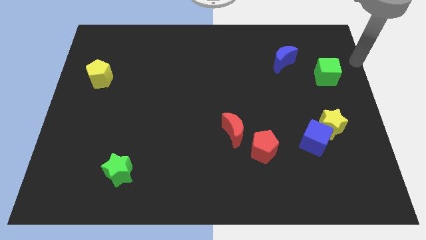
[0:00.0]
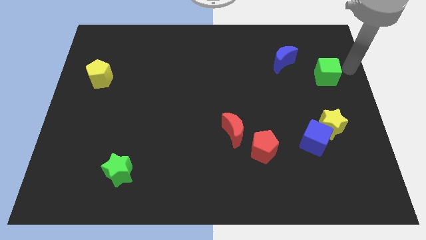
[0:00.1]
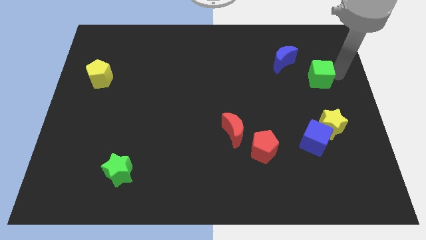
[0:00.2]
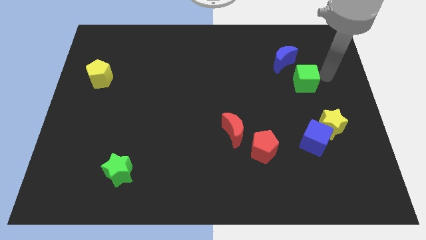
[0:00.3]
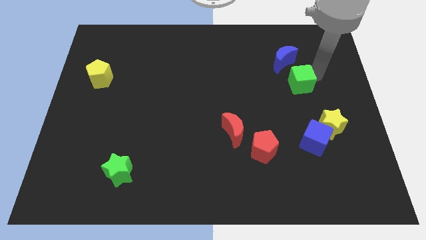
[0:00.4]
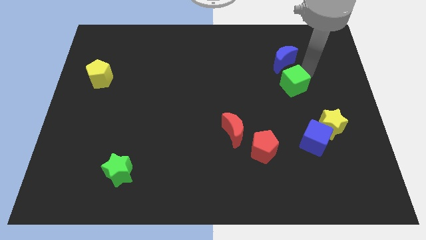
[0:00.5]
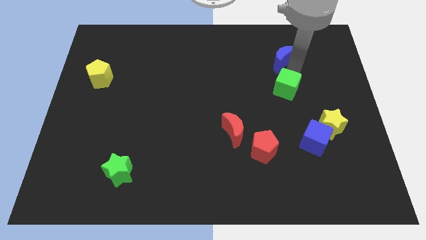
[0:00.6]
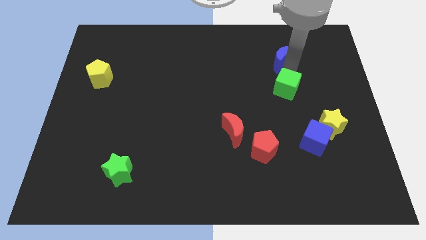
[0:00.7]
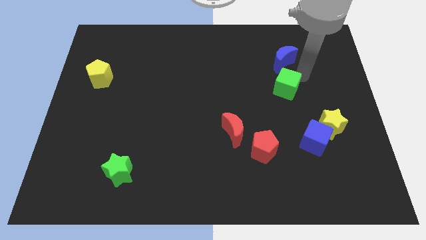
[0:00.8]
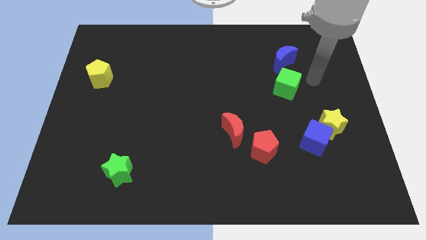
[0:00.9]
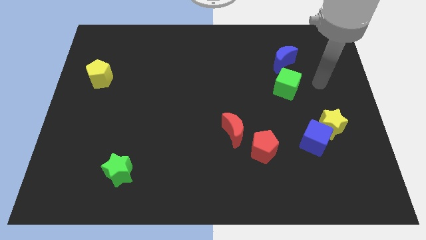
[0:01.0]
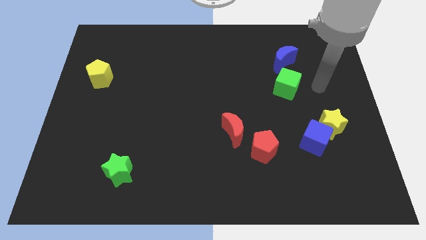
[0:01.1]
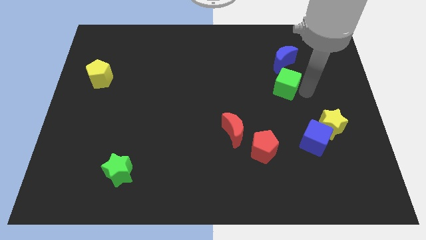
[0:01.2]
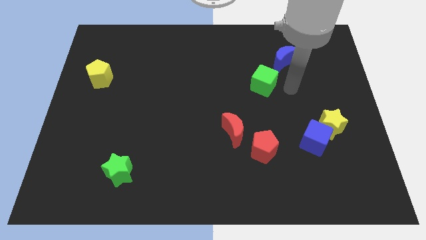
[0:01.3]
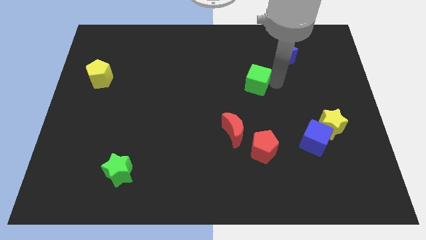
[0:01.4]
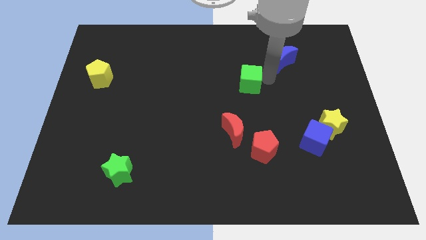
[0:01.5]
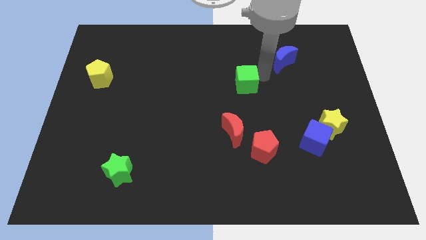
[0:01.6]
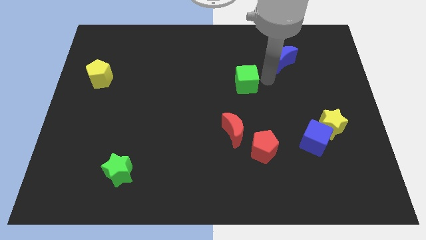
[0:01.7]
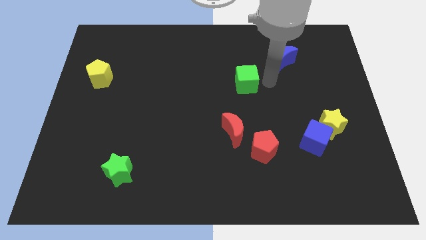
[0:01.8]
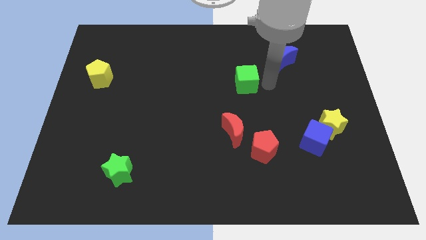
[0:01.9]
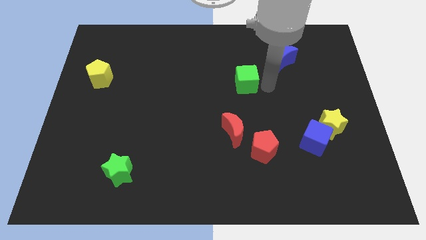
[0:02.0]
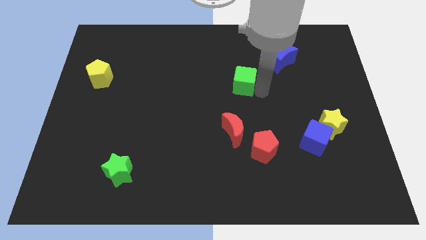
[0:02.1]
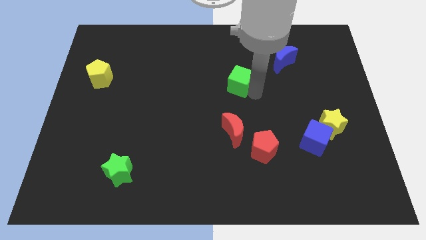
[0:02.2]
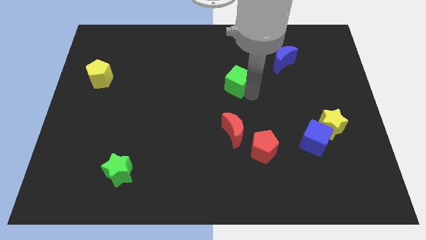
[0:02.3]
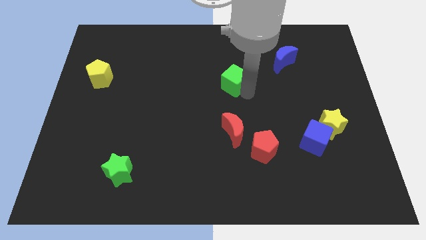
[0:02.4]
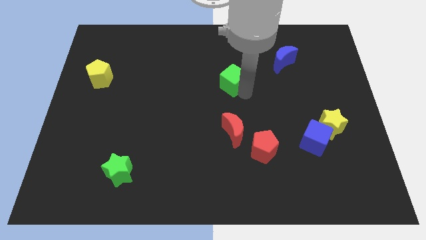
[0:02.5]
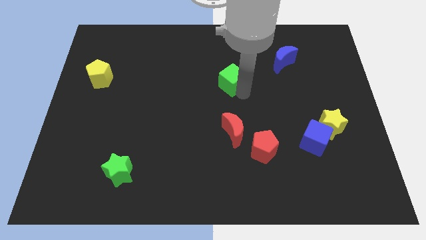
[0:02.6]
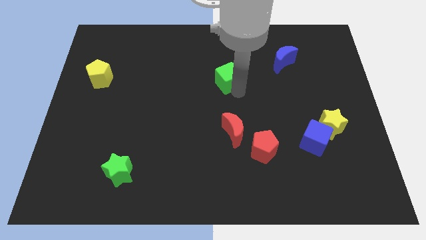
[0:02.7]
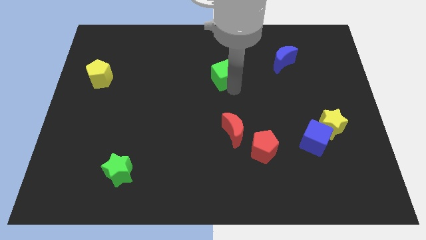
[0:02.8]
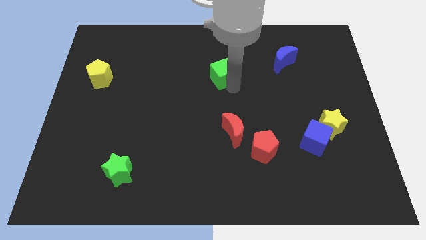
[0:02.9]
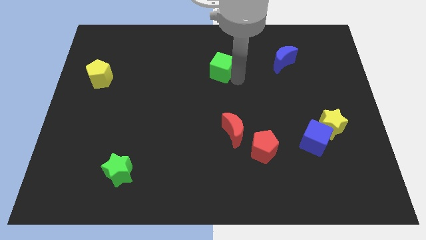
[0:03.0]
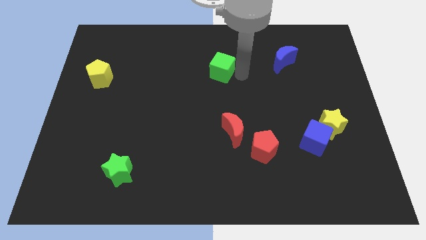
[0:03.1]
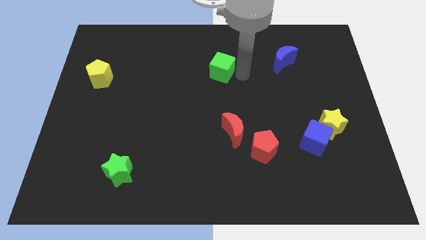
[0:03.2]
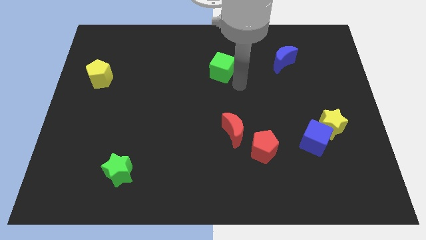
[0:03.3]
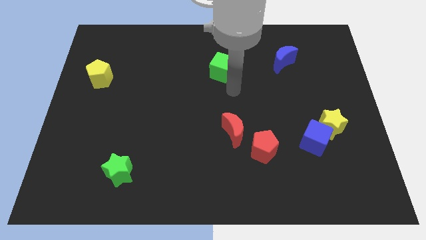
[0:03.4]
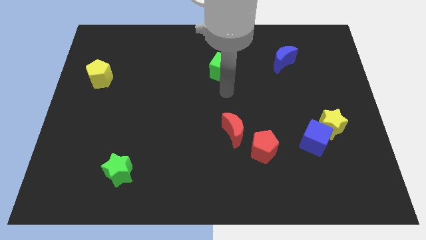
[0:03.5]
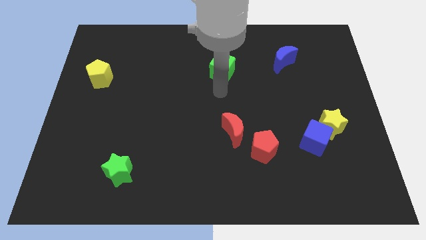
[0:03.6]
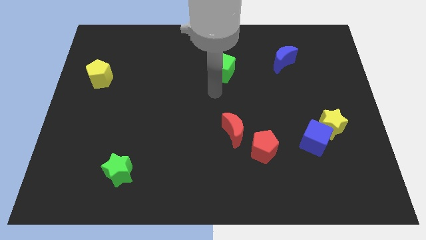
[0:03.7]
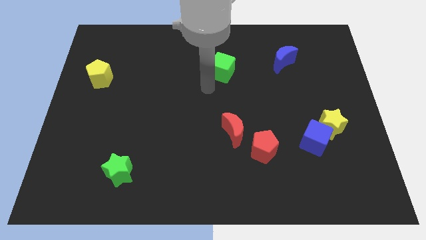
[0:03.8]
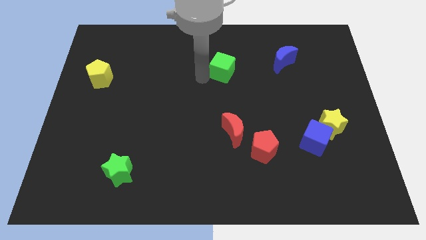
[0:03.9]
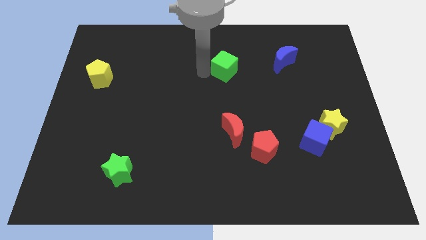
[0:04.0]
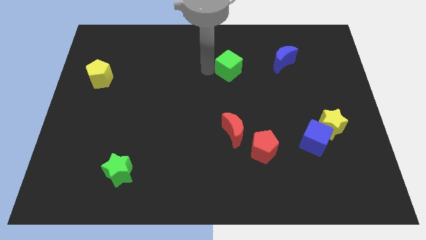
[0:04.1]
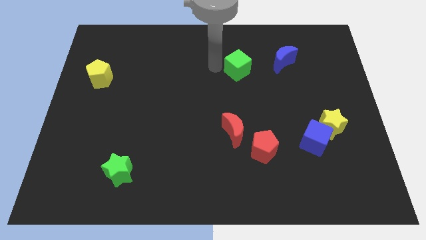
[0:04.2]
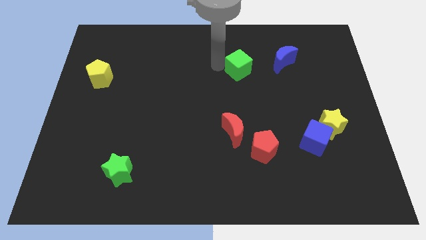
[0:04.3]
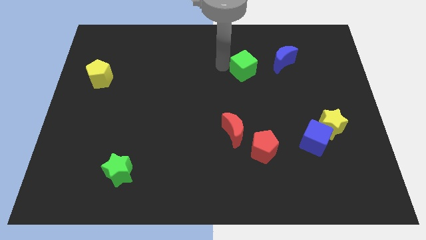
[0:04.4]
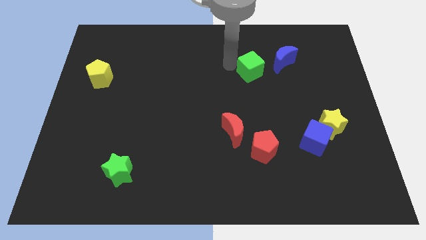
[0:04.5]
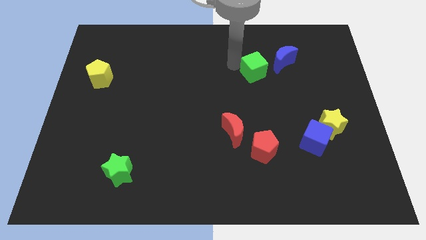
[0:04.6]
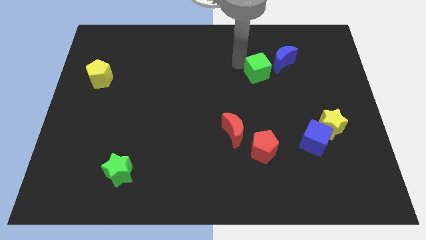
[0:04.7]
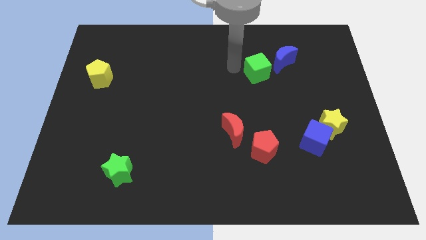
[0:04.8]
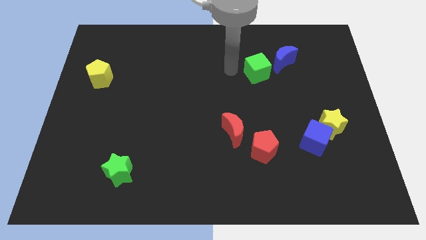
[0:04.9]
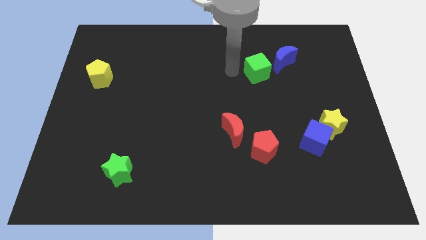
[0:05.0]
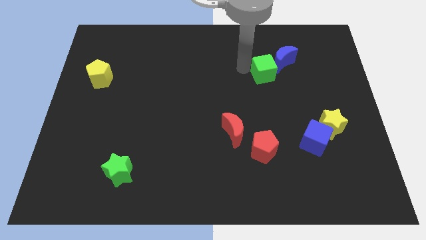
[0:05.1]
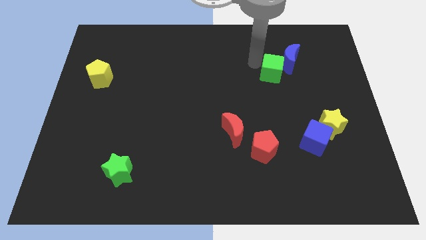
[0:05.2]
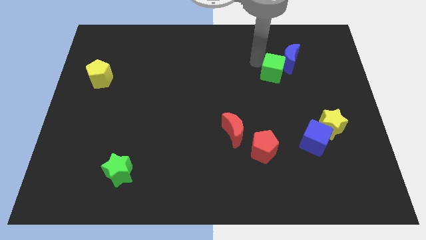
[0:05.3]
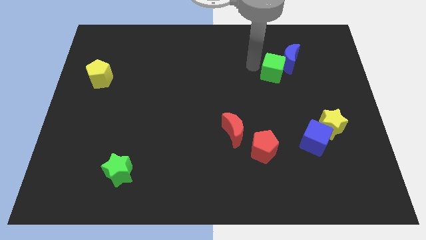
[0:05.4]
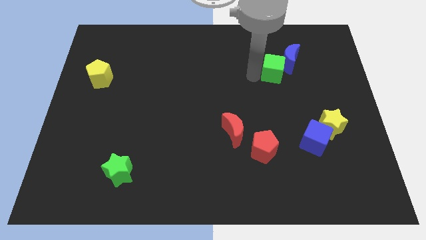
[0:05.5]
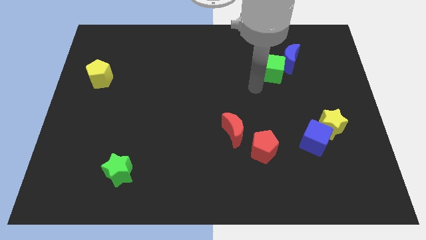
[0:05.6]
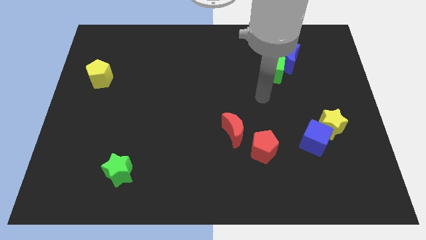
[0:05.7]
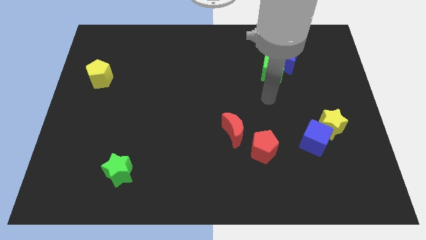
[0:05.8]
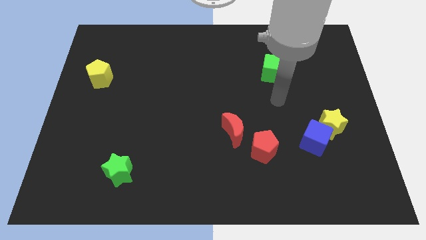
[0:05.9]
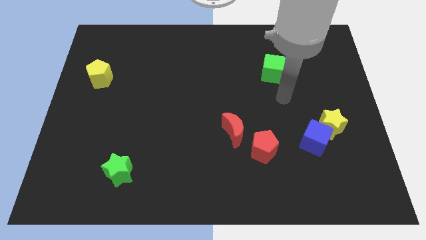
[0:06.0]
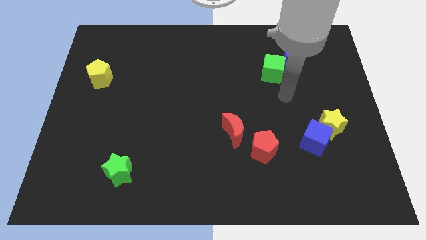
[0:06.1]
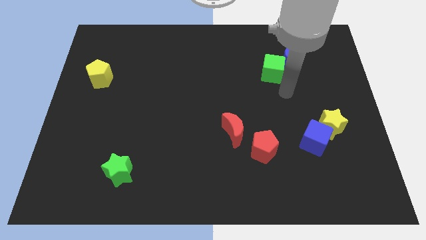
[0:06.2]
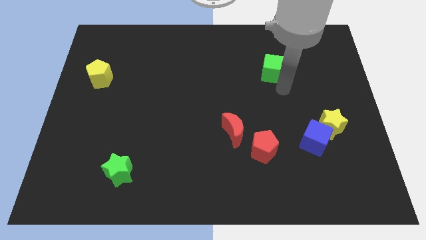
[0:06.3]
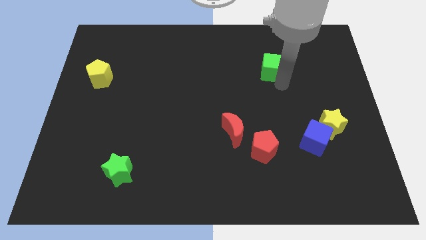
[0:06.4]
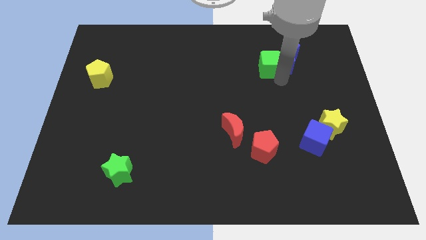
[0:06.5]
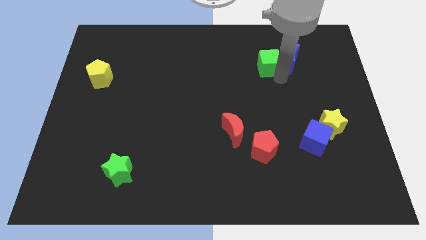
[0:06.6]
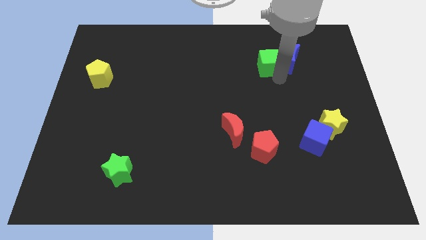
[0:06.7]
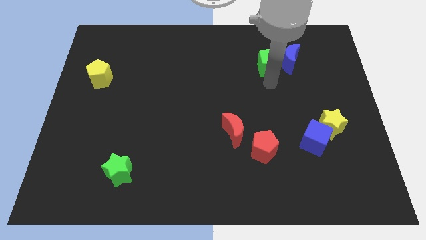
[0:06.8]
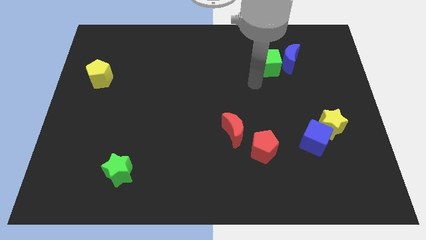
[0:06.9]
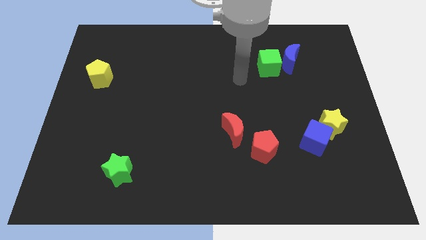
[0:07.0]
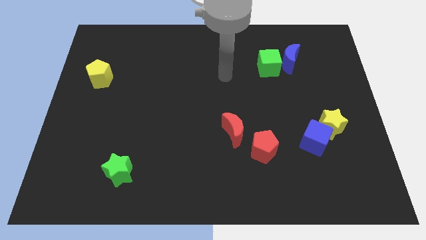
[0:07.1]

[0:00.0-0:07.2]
move the green cube to the left of blue crescent

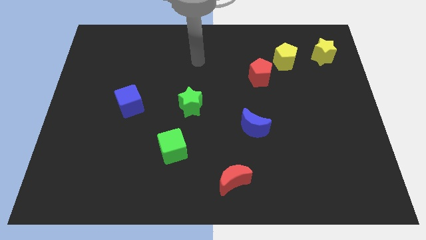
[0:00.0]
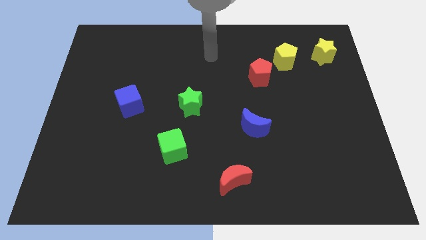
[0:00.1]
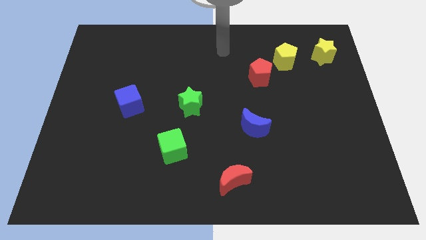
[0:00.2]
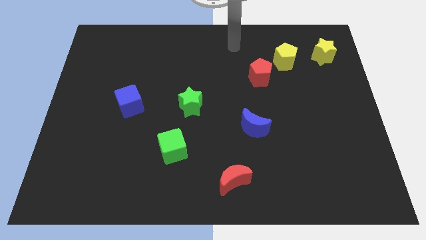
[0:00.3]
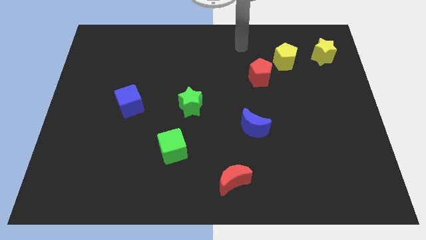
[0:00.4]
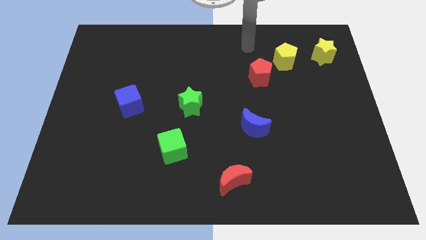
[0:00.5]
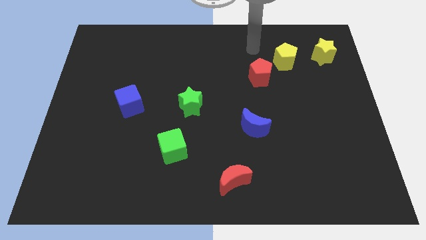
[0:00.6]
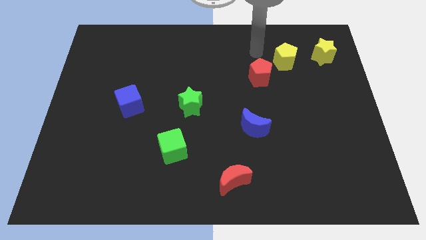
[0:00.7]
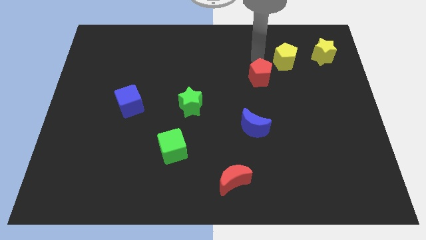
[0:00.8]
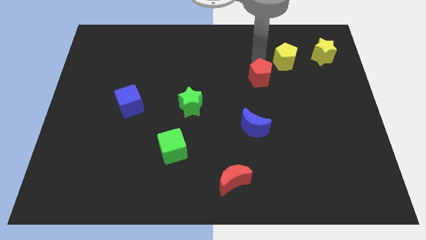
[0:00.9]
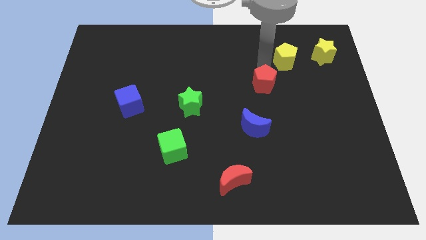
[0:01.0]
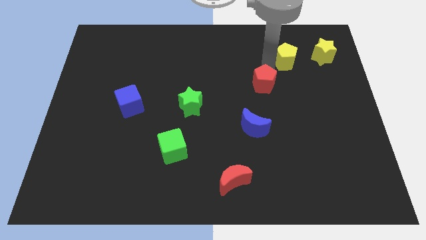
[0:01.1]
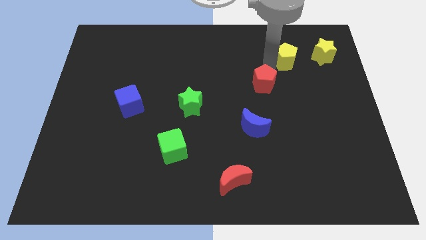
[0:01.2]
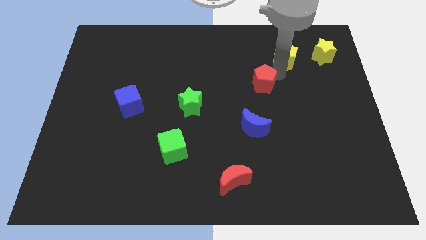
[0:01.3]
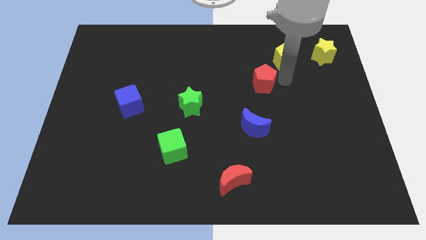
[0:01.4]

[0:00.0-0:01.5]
slightly move down the red pentagon

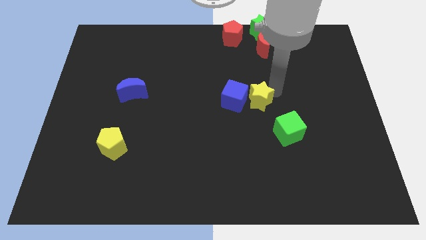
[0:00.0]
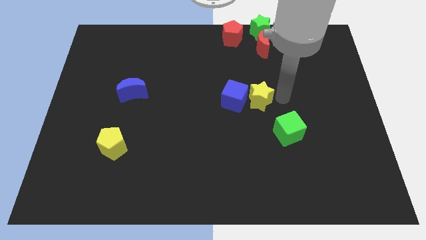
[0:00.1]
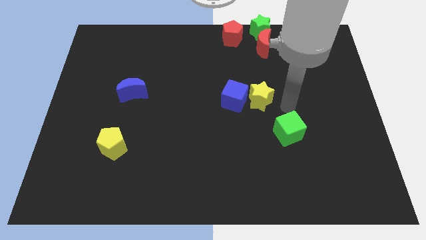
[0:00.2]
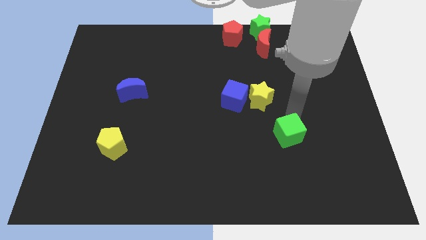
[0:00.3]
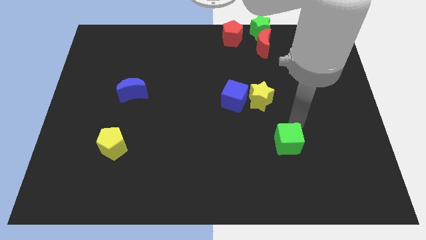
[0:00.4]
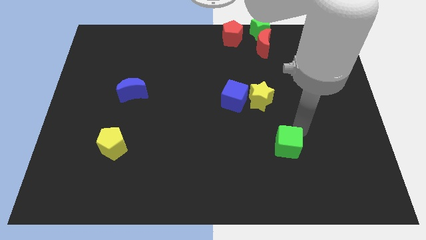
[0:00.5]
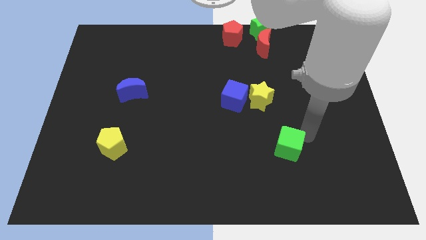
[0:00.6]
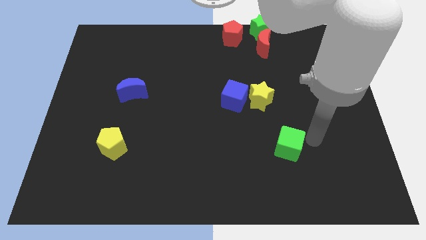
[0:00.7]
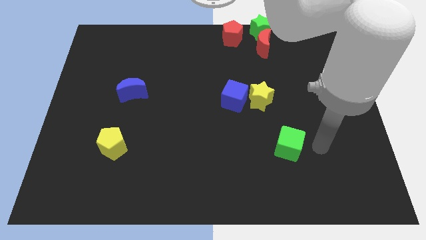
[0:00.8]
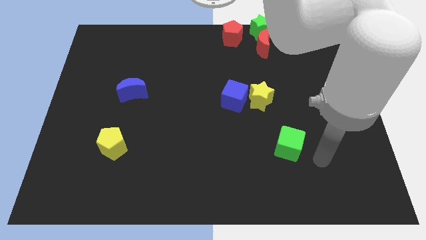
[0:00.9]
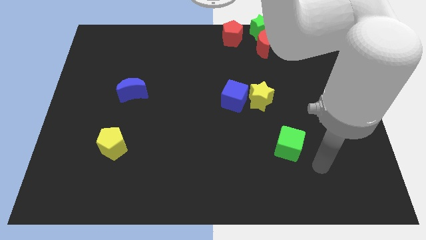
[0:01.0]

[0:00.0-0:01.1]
push the green cube slightly to the bottom
